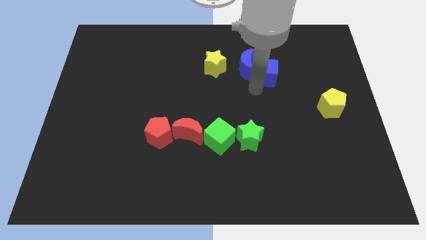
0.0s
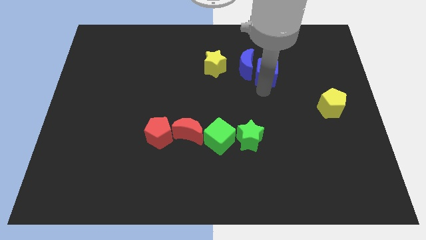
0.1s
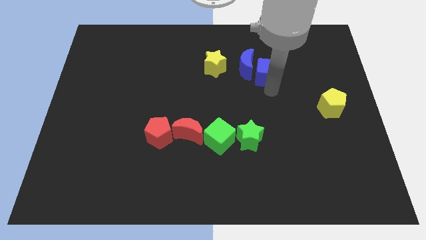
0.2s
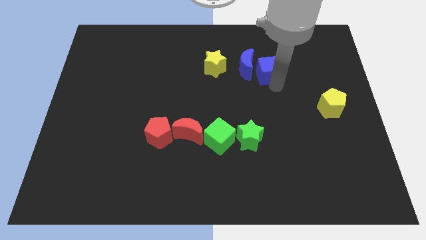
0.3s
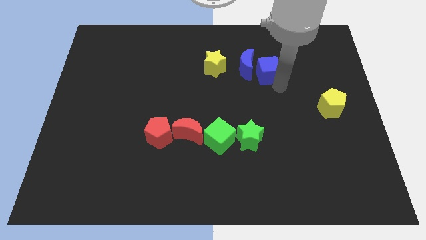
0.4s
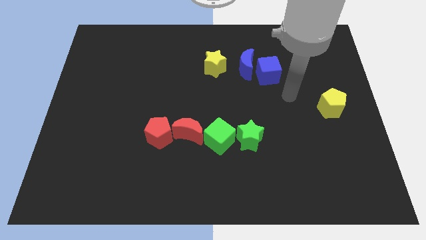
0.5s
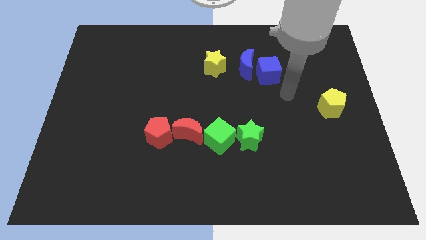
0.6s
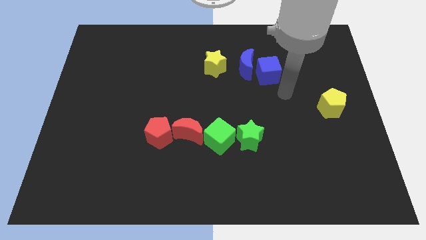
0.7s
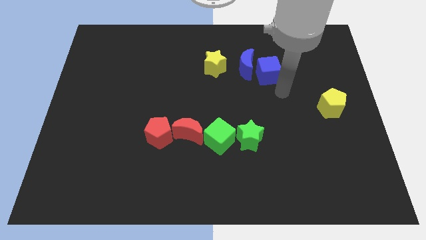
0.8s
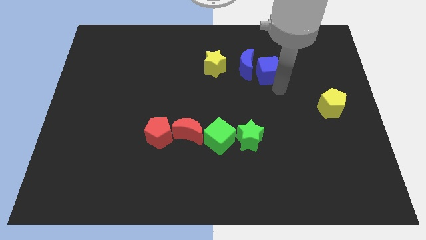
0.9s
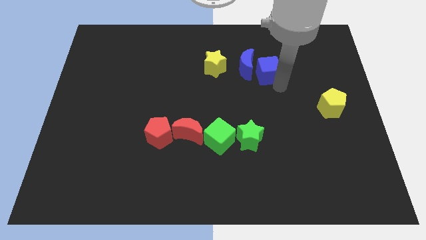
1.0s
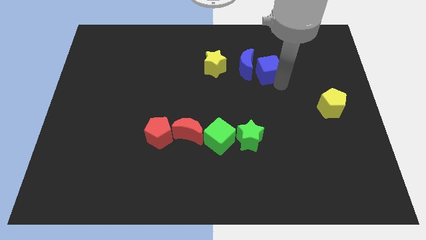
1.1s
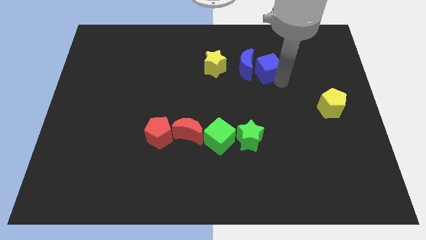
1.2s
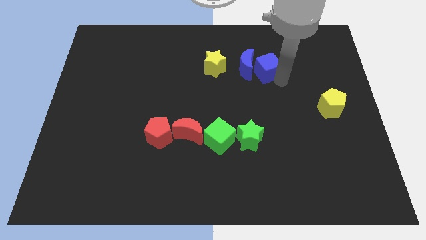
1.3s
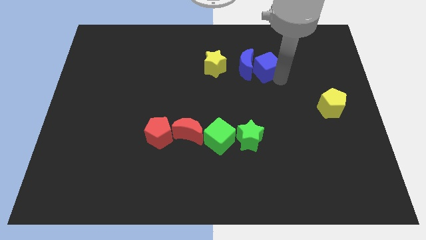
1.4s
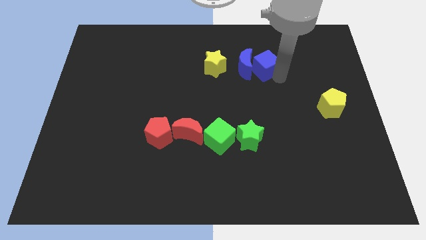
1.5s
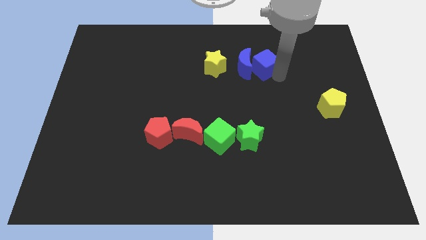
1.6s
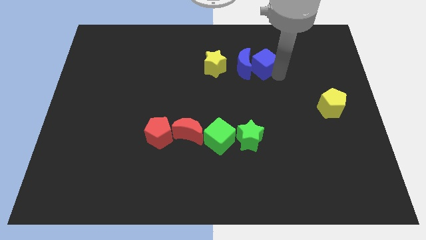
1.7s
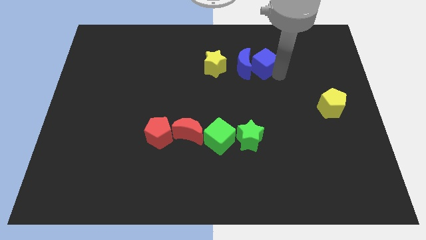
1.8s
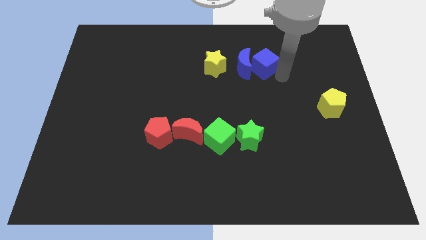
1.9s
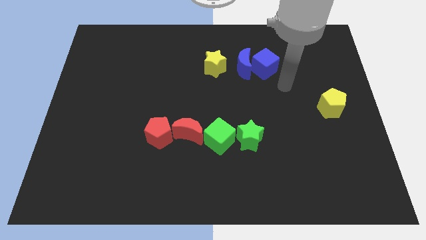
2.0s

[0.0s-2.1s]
move blue cube towards blue moon

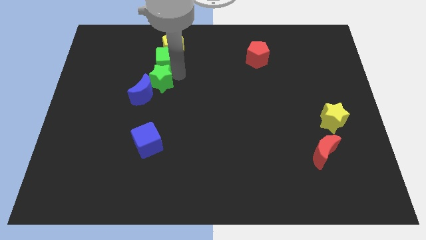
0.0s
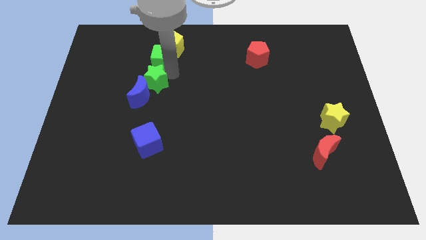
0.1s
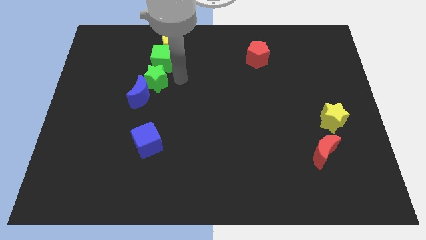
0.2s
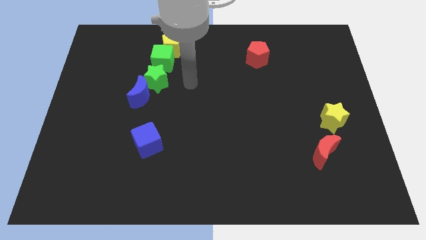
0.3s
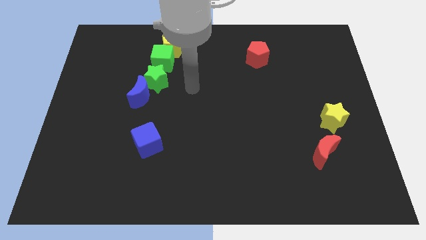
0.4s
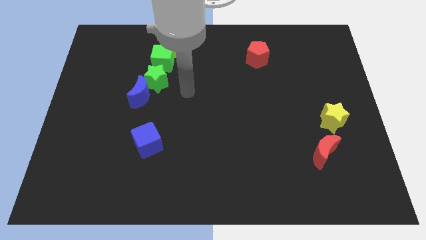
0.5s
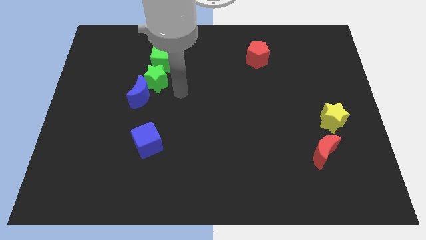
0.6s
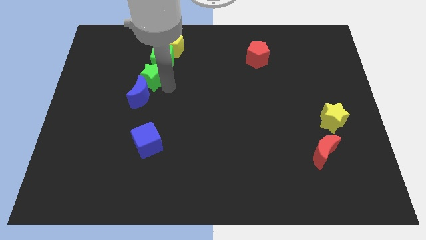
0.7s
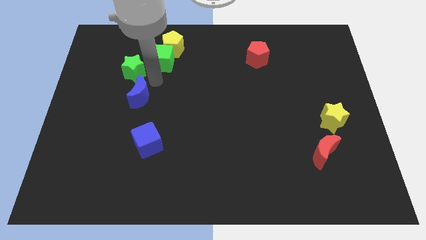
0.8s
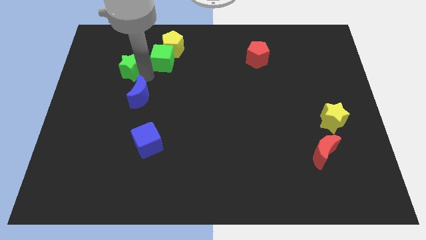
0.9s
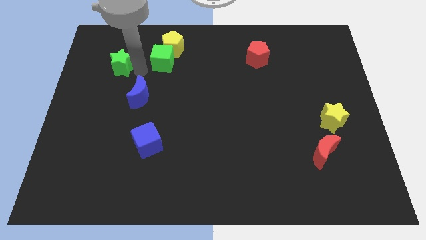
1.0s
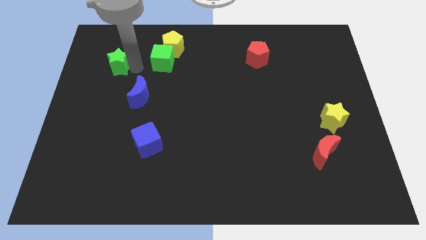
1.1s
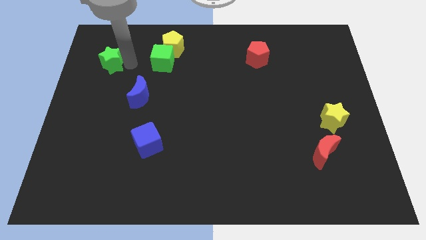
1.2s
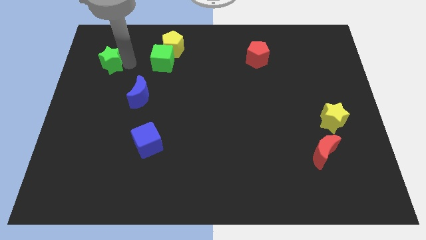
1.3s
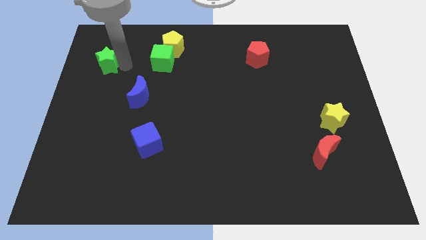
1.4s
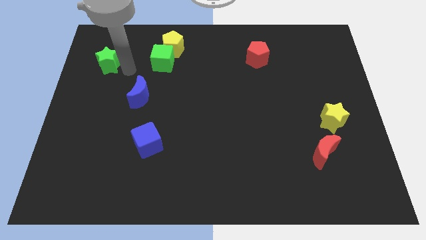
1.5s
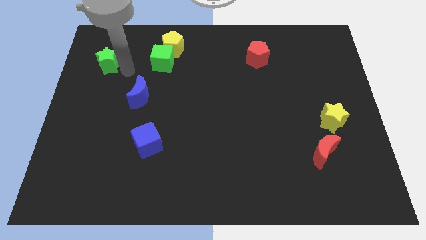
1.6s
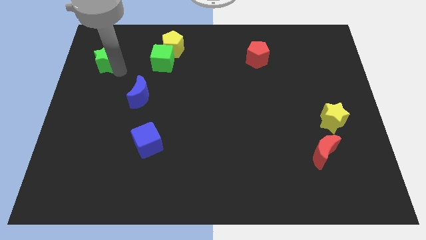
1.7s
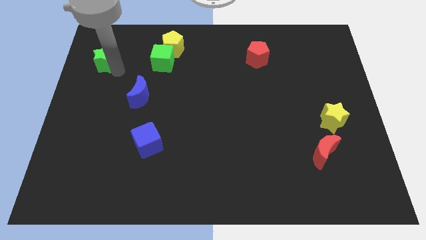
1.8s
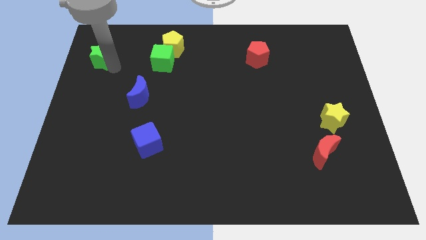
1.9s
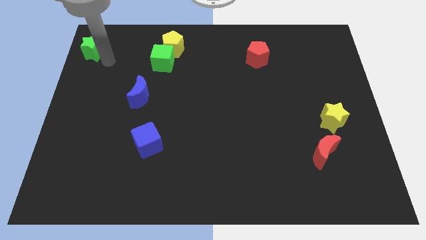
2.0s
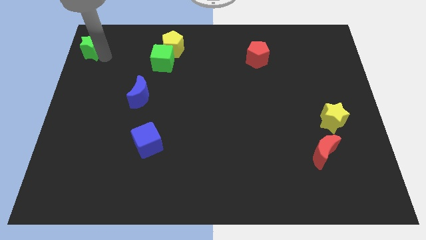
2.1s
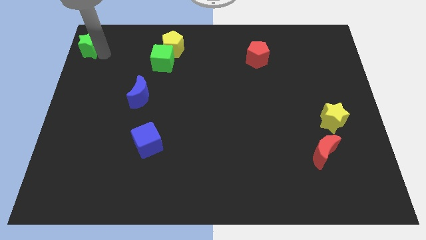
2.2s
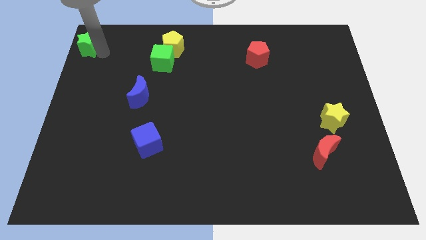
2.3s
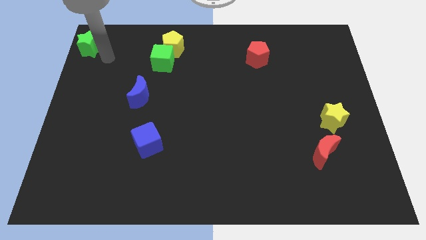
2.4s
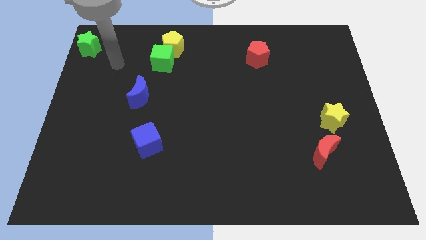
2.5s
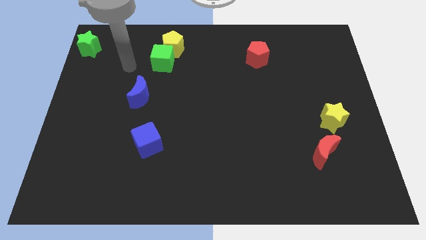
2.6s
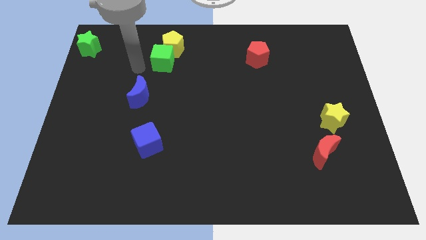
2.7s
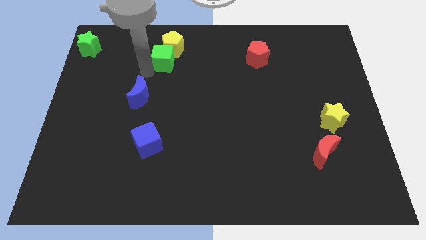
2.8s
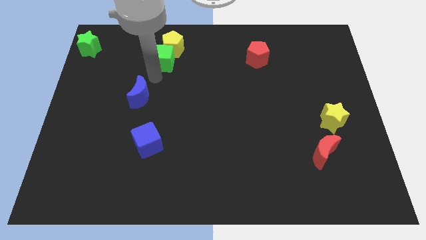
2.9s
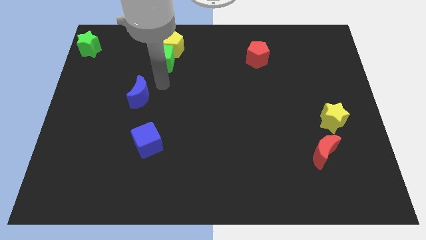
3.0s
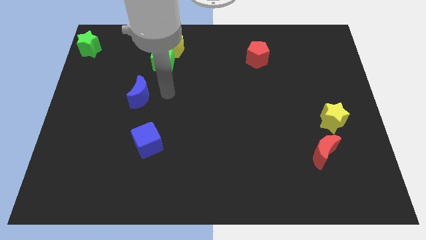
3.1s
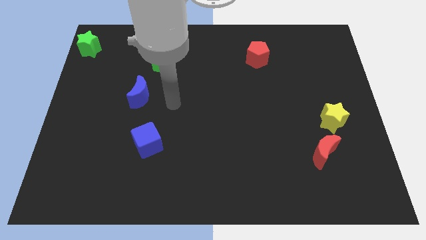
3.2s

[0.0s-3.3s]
separate the green star from the green cube

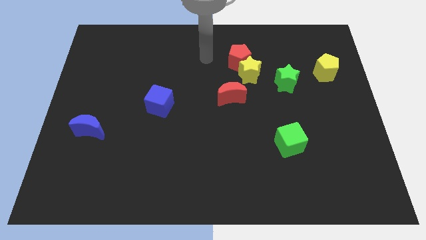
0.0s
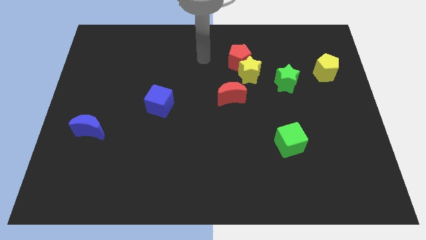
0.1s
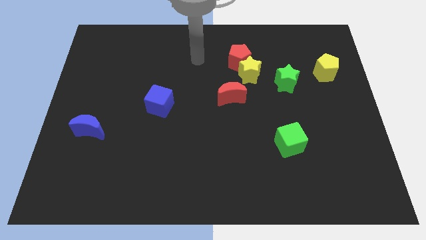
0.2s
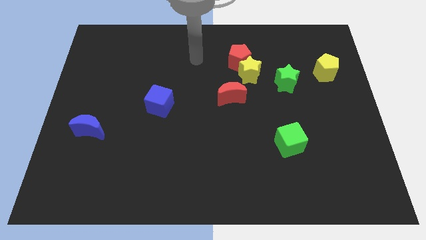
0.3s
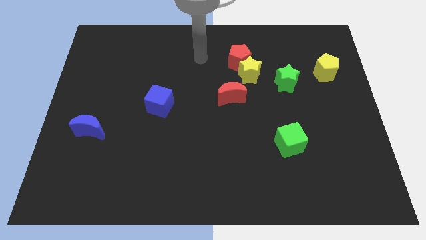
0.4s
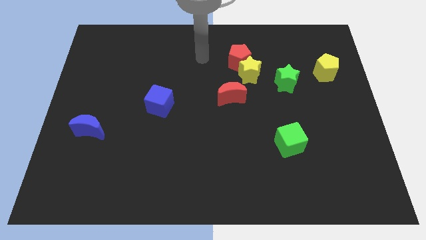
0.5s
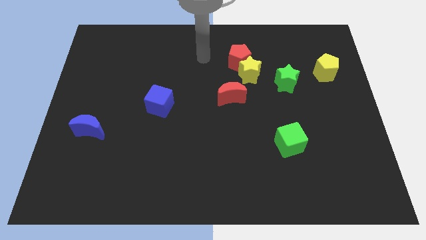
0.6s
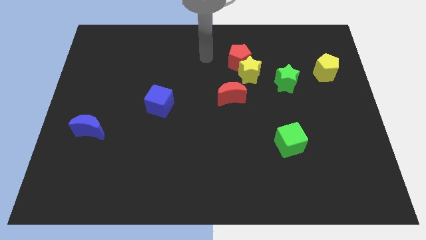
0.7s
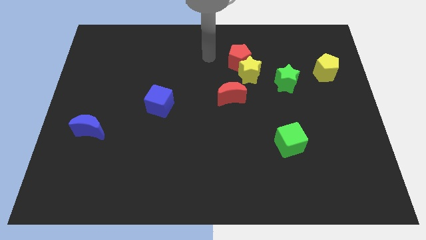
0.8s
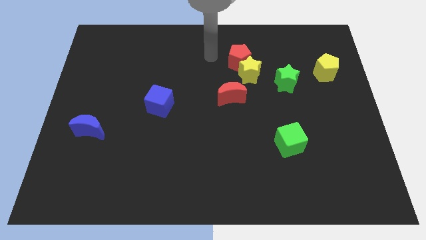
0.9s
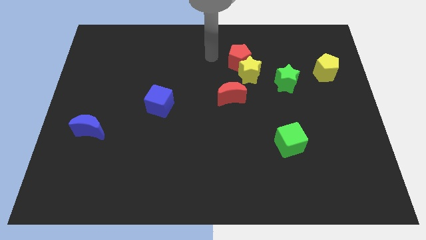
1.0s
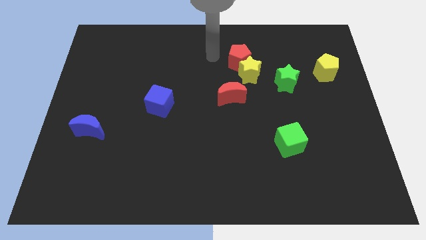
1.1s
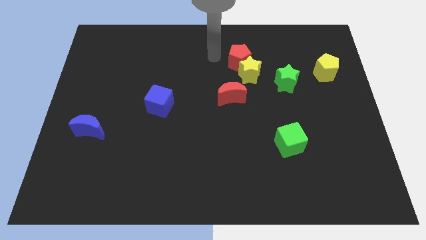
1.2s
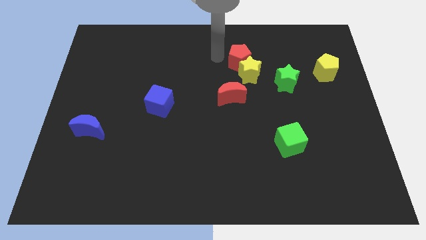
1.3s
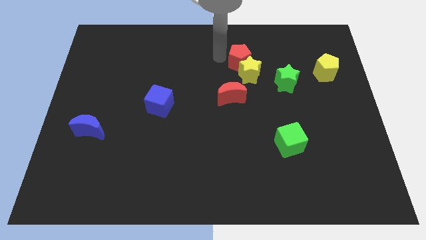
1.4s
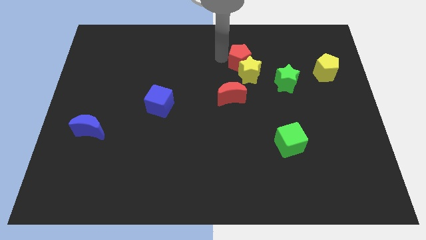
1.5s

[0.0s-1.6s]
touch the left side of the red pentagon

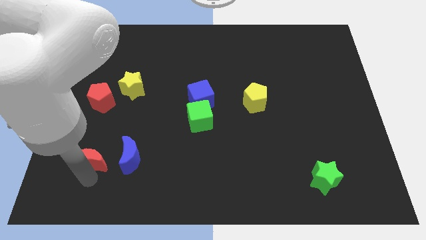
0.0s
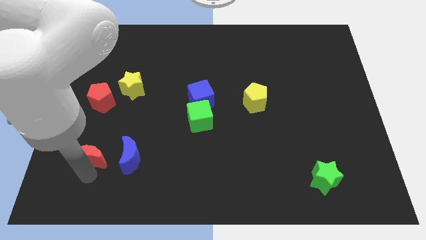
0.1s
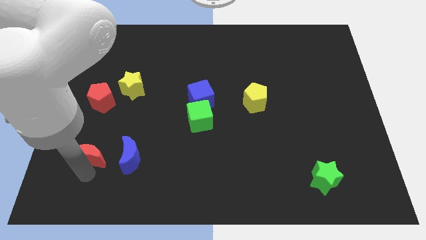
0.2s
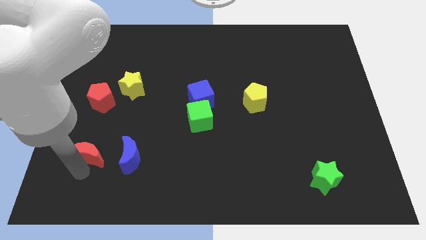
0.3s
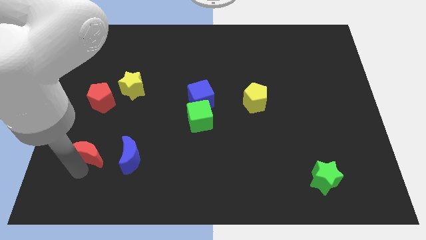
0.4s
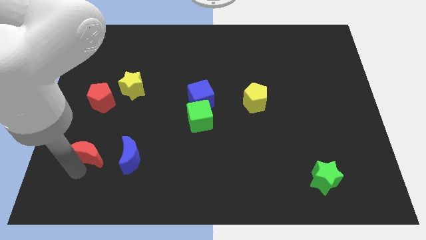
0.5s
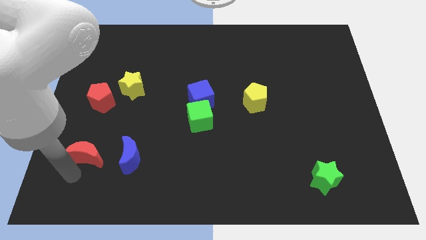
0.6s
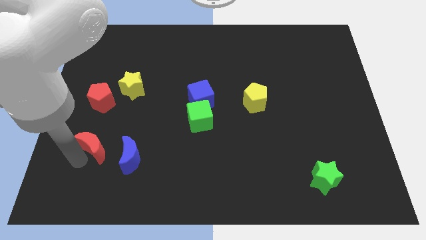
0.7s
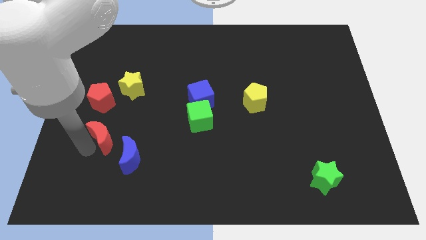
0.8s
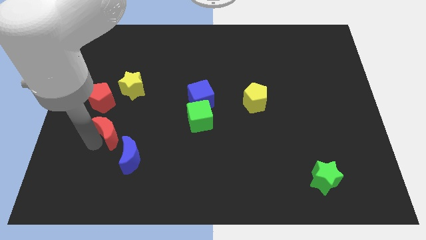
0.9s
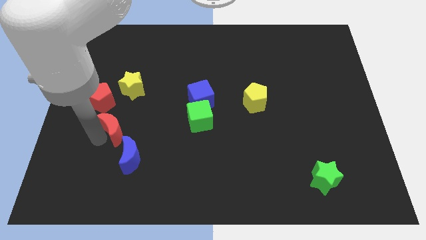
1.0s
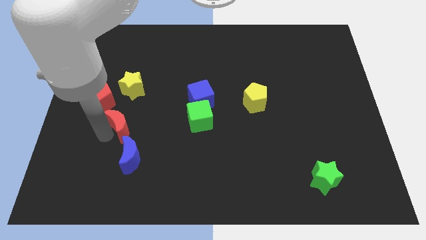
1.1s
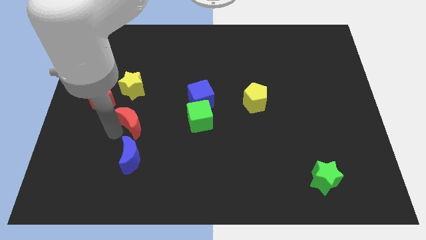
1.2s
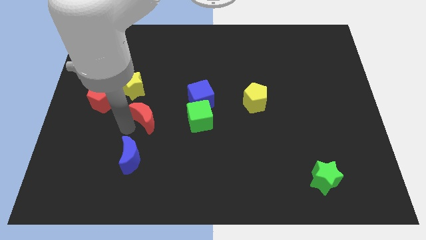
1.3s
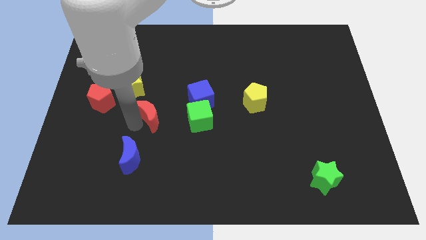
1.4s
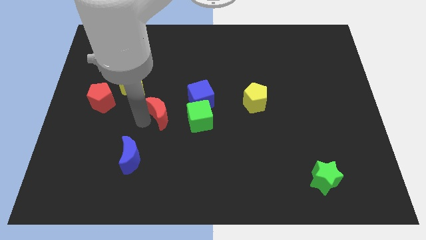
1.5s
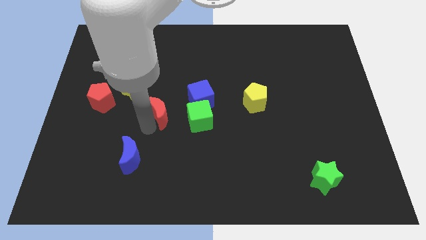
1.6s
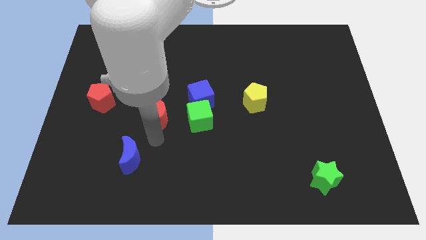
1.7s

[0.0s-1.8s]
push the red crescent to the left of green cube

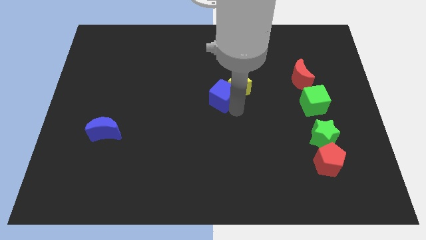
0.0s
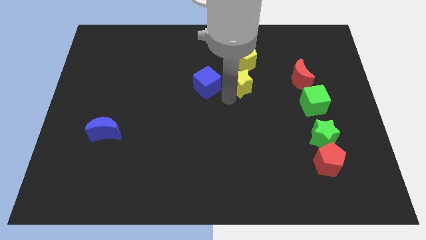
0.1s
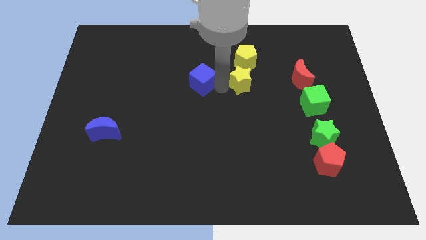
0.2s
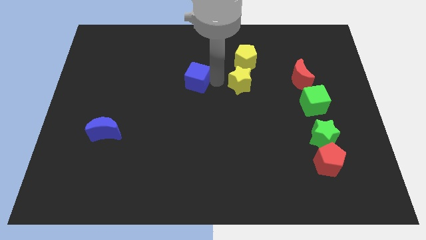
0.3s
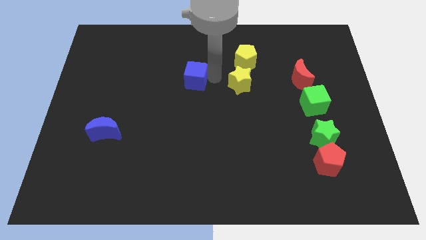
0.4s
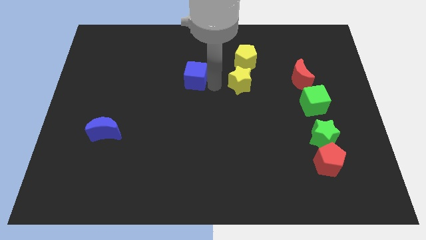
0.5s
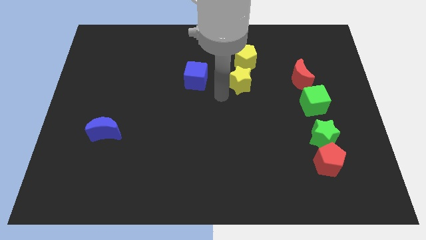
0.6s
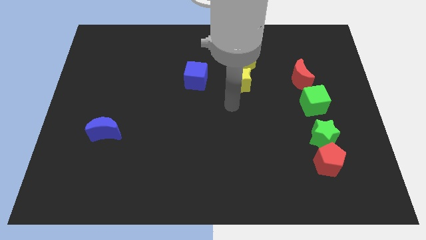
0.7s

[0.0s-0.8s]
separate the blue cube from yellow star
